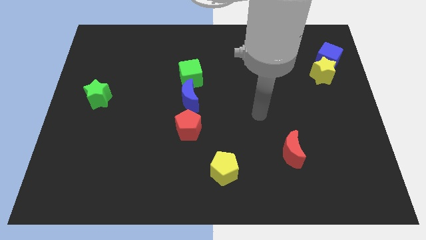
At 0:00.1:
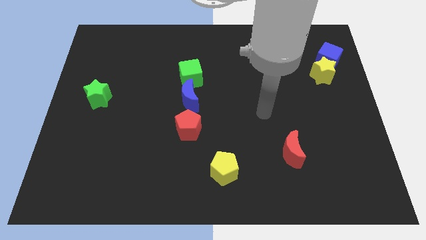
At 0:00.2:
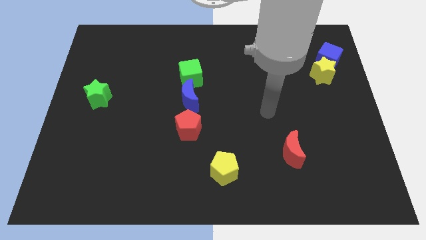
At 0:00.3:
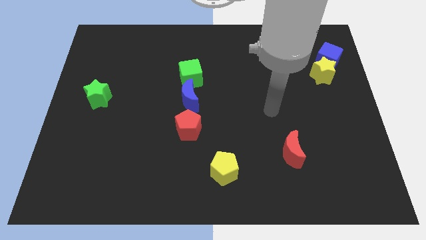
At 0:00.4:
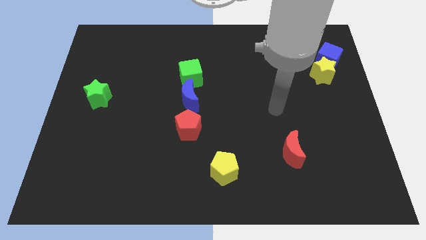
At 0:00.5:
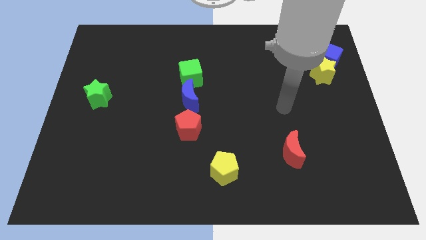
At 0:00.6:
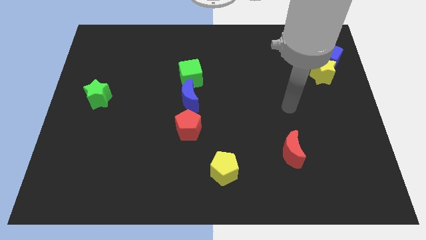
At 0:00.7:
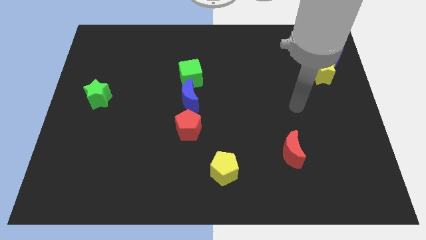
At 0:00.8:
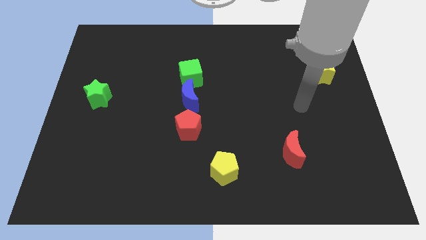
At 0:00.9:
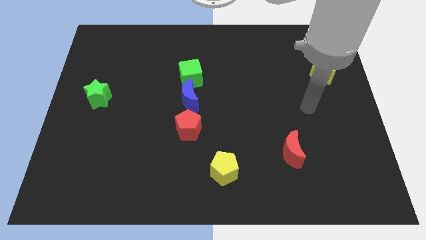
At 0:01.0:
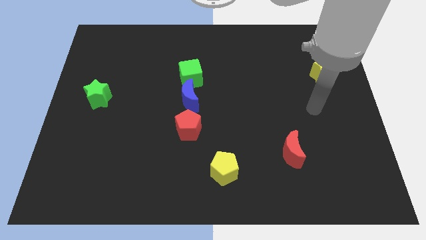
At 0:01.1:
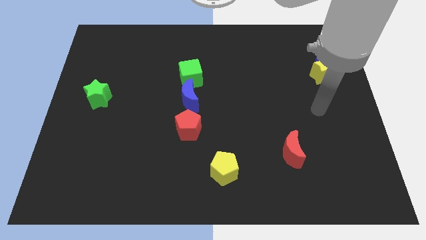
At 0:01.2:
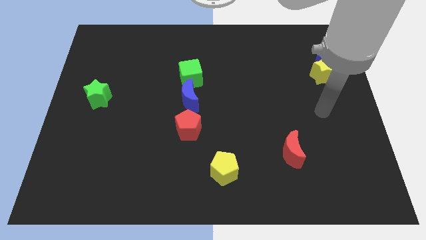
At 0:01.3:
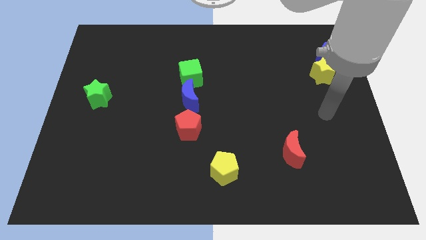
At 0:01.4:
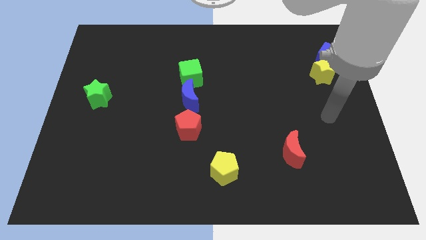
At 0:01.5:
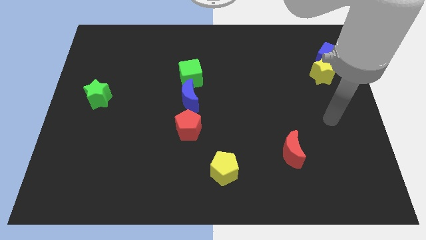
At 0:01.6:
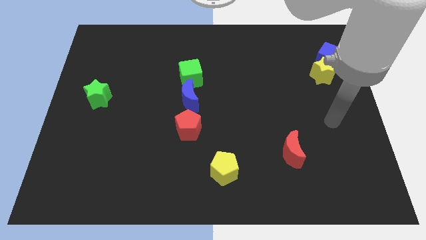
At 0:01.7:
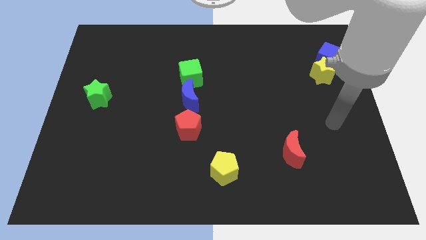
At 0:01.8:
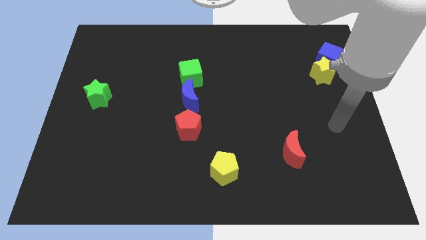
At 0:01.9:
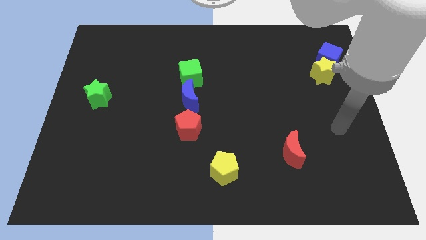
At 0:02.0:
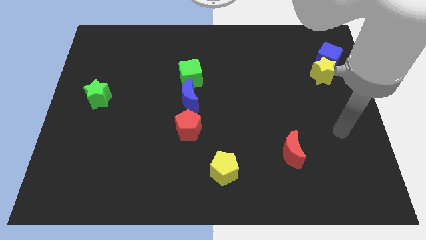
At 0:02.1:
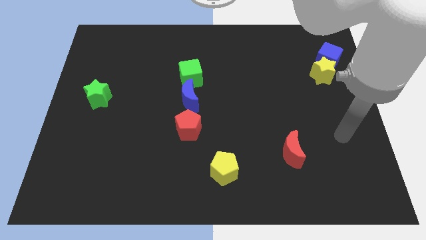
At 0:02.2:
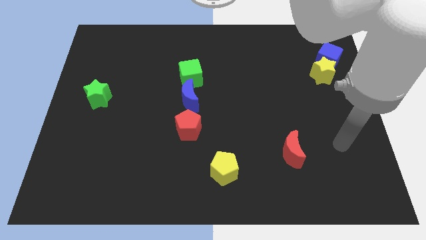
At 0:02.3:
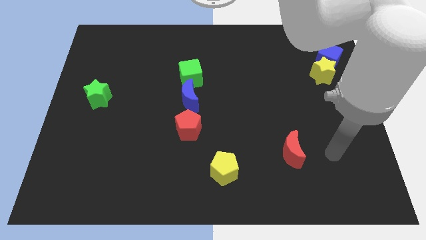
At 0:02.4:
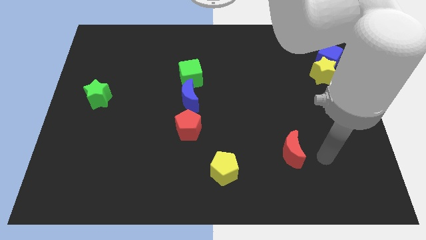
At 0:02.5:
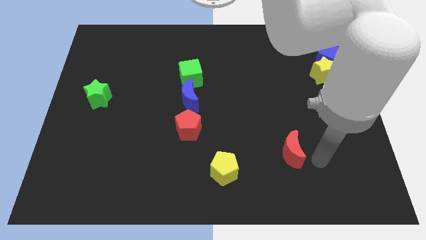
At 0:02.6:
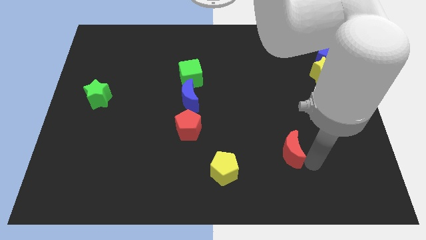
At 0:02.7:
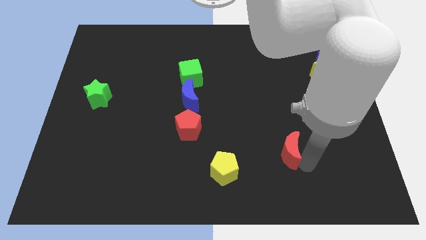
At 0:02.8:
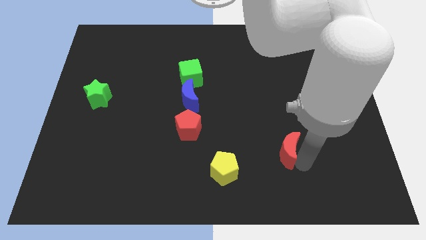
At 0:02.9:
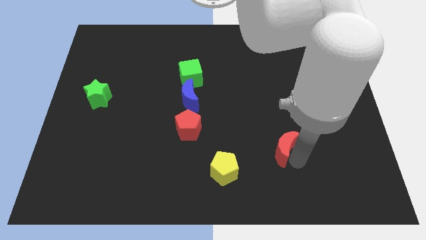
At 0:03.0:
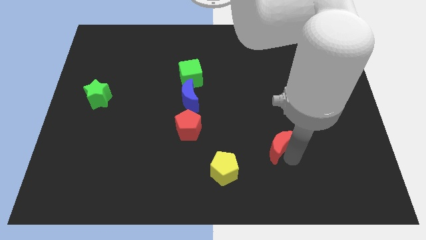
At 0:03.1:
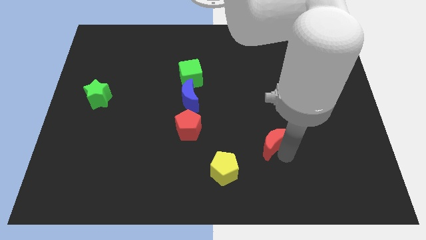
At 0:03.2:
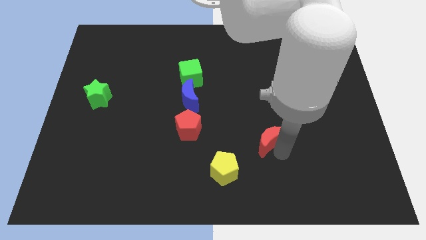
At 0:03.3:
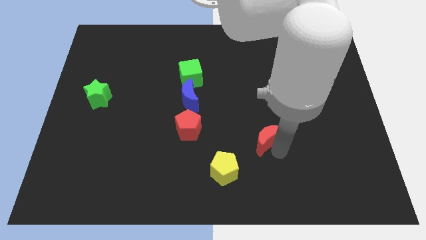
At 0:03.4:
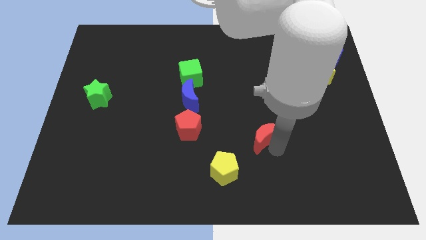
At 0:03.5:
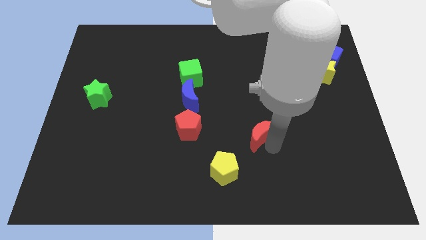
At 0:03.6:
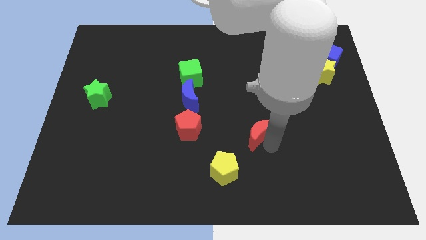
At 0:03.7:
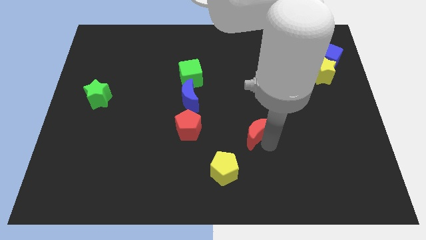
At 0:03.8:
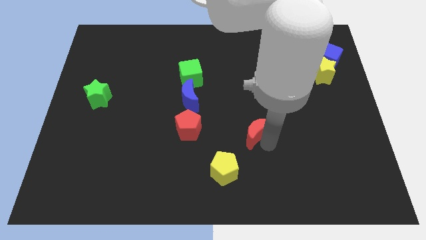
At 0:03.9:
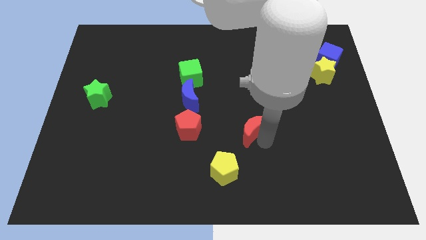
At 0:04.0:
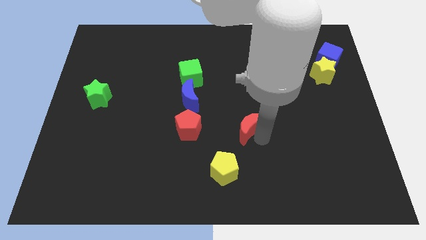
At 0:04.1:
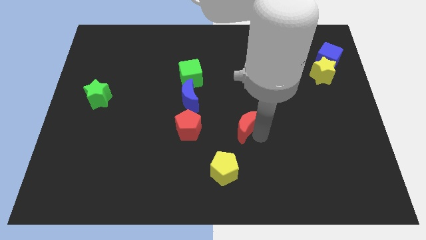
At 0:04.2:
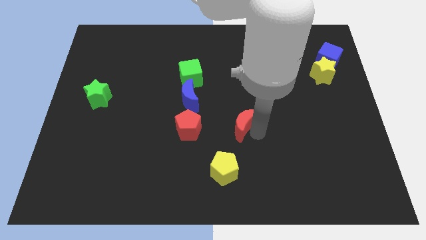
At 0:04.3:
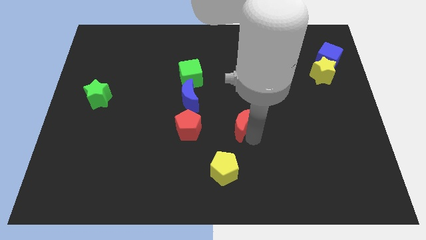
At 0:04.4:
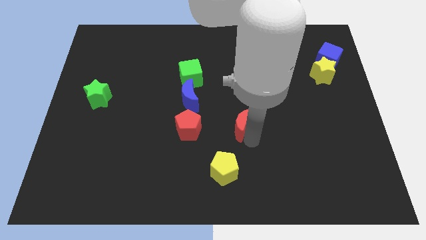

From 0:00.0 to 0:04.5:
place red crescent horizontally to the right side of the red pentagon

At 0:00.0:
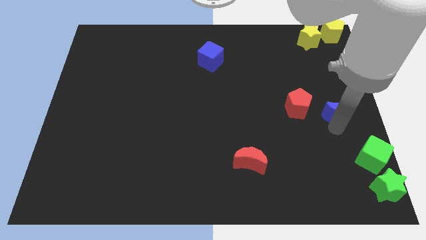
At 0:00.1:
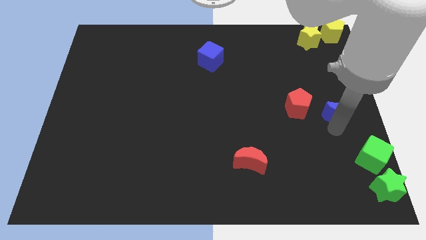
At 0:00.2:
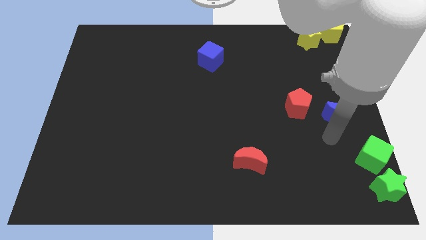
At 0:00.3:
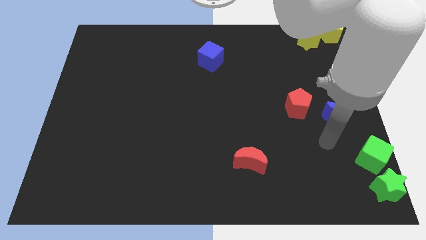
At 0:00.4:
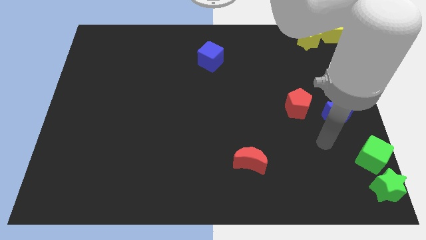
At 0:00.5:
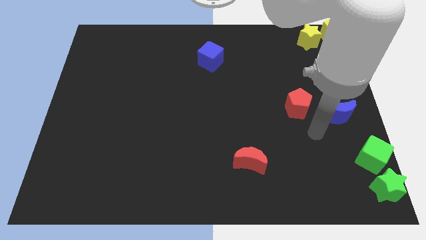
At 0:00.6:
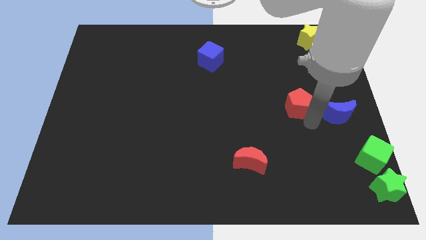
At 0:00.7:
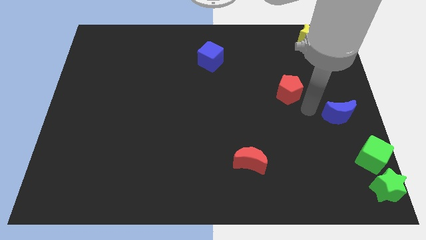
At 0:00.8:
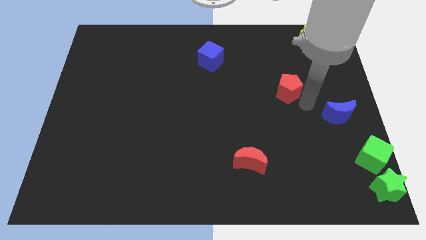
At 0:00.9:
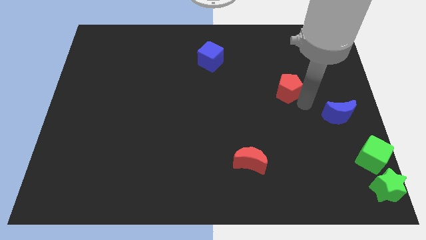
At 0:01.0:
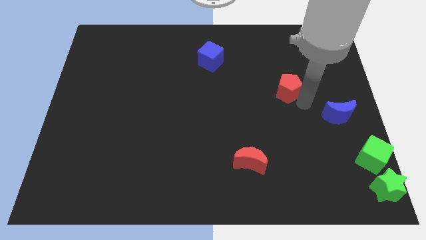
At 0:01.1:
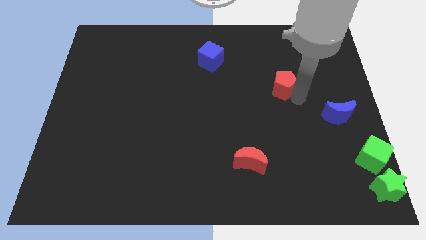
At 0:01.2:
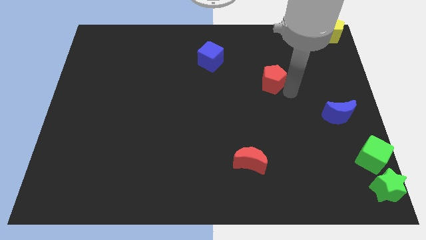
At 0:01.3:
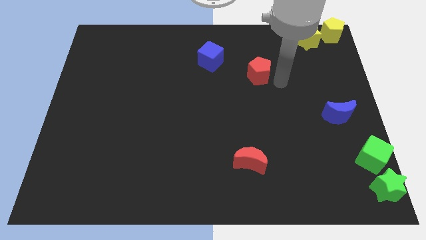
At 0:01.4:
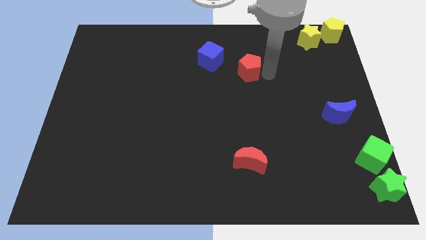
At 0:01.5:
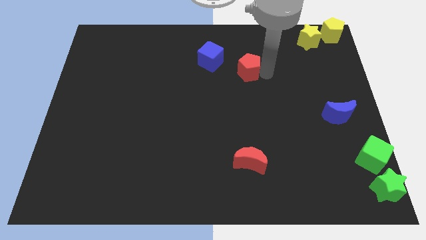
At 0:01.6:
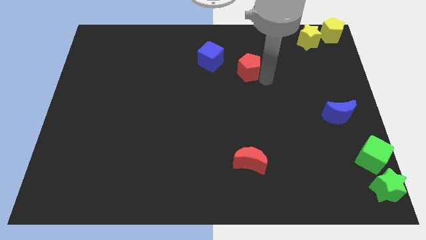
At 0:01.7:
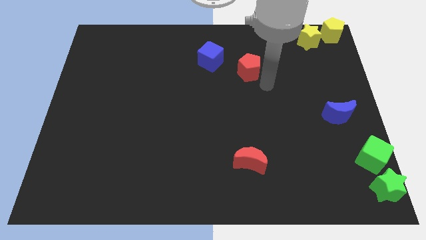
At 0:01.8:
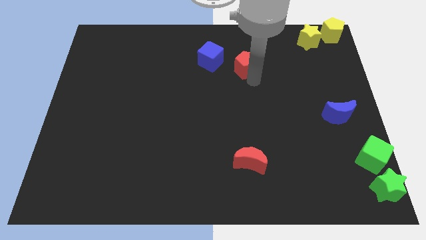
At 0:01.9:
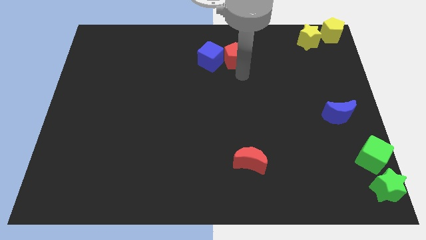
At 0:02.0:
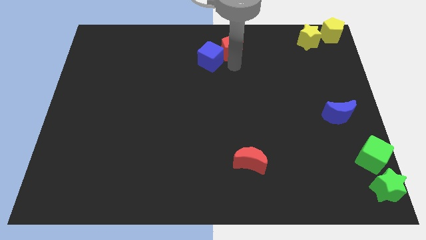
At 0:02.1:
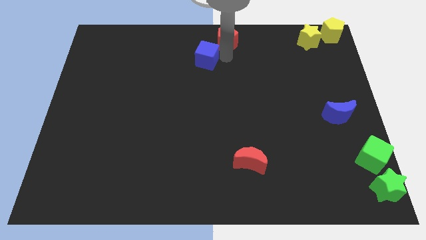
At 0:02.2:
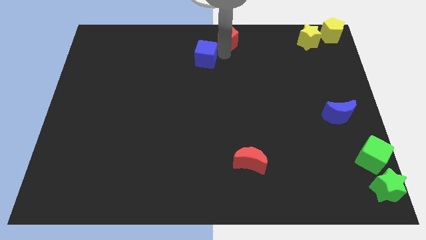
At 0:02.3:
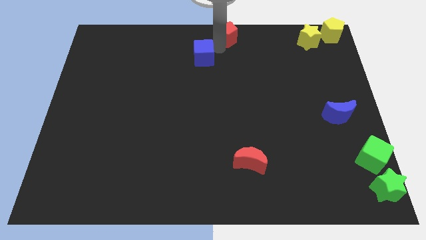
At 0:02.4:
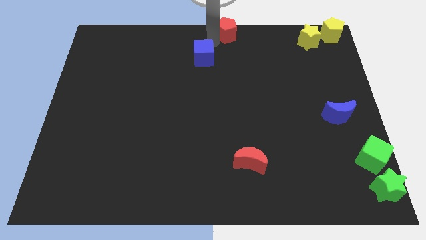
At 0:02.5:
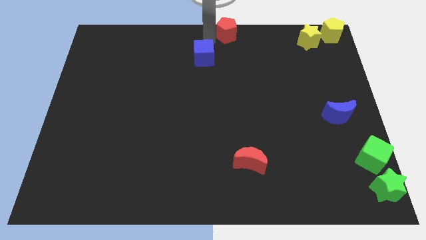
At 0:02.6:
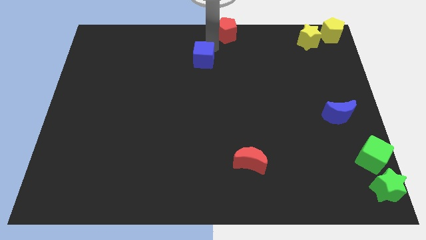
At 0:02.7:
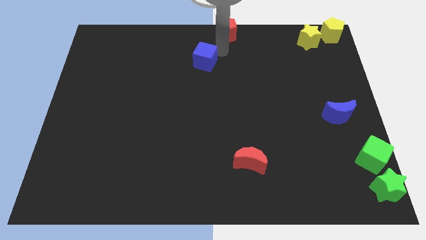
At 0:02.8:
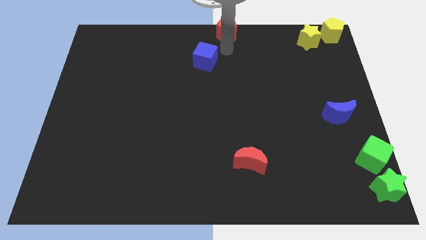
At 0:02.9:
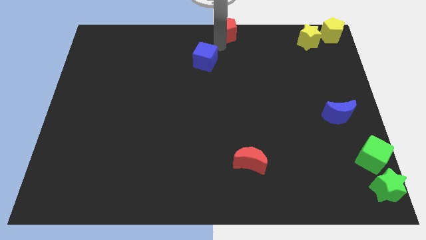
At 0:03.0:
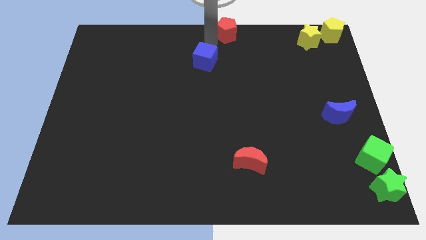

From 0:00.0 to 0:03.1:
place the red pentagon at the top center of the board

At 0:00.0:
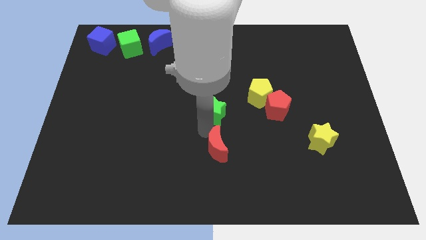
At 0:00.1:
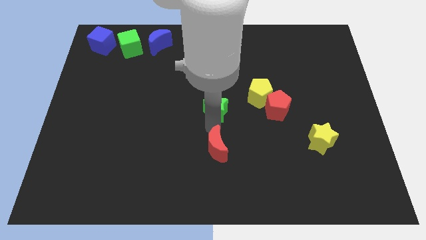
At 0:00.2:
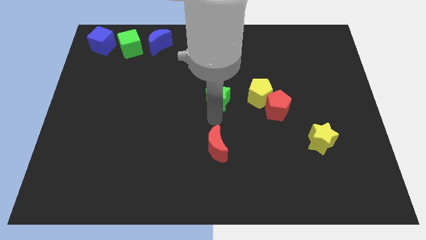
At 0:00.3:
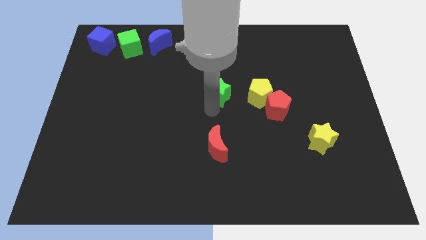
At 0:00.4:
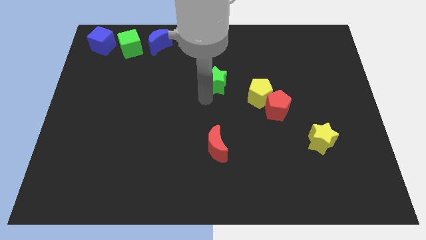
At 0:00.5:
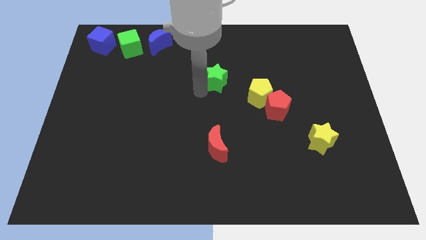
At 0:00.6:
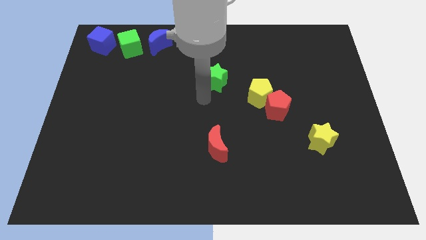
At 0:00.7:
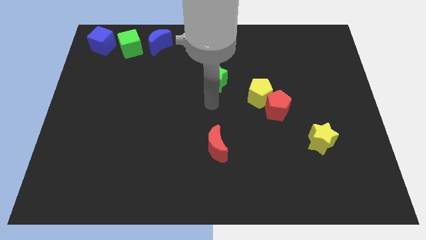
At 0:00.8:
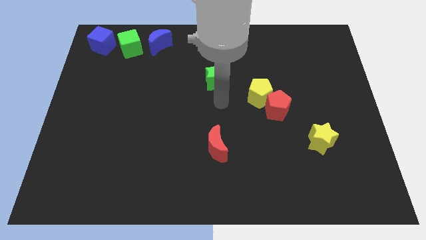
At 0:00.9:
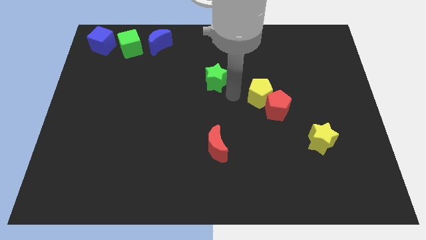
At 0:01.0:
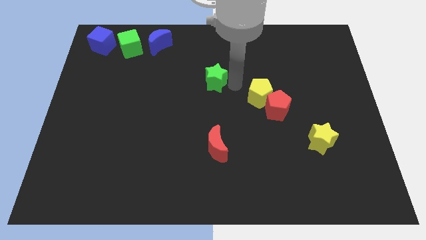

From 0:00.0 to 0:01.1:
separate the green star from red crescent

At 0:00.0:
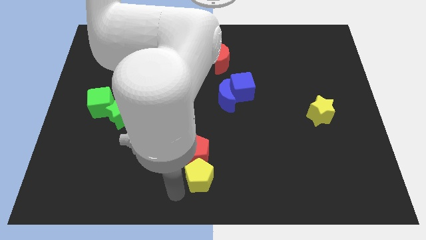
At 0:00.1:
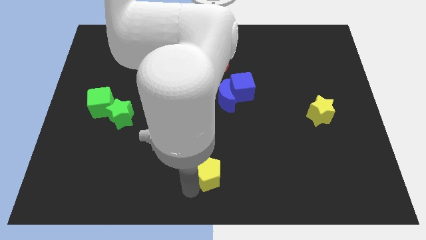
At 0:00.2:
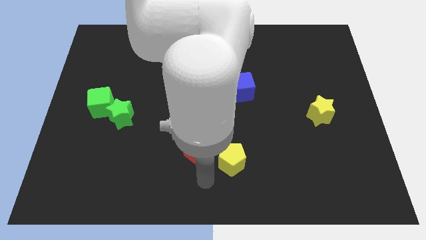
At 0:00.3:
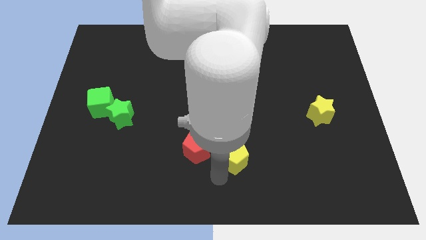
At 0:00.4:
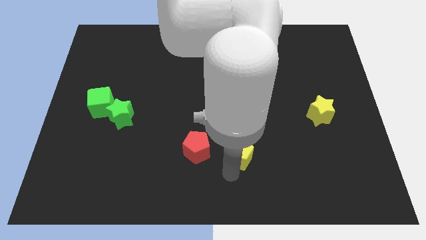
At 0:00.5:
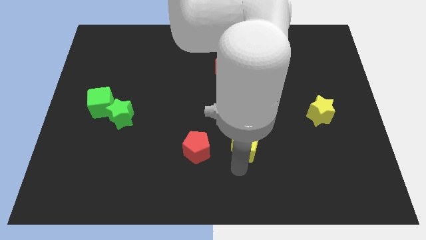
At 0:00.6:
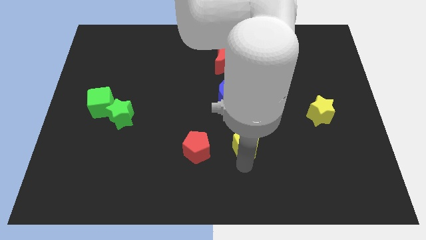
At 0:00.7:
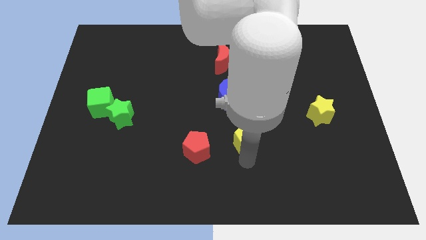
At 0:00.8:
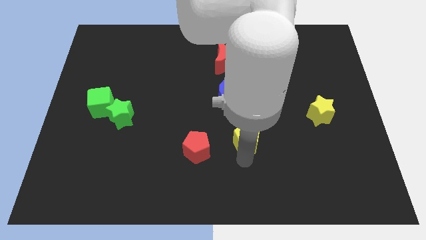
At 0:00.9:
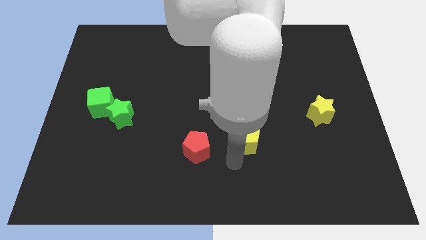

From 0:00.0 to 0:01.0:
separate yellow pentagon from red pentagon
